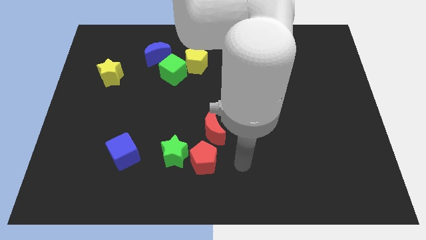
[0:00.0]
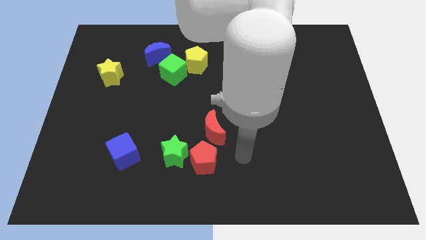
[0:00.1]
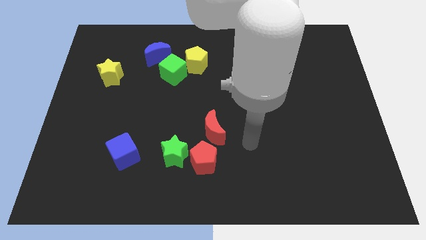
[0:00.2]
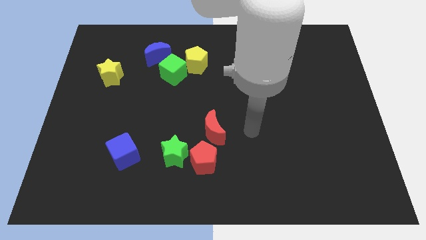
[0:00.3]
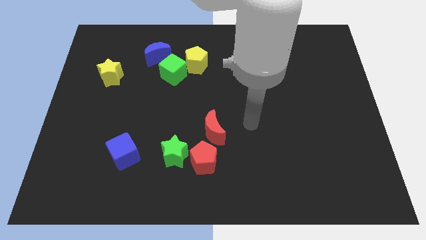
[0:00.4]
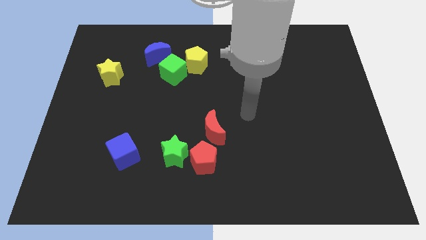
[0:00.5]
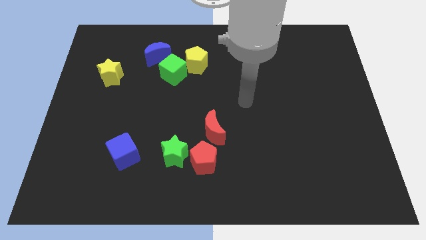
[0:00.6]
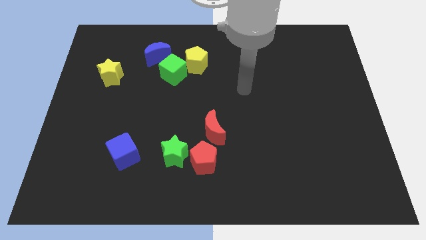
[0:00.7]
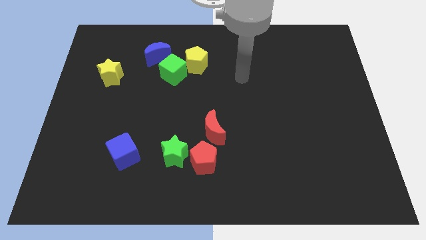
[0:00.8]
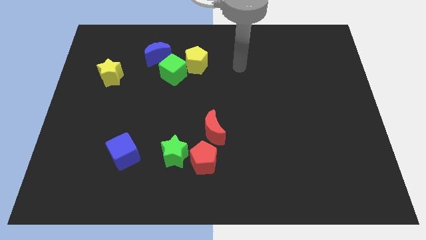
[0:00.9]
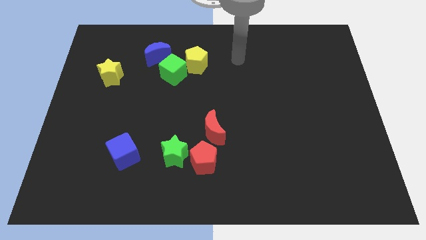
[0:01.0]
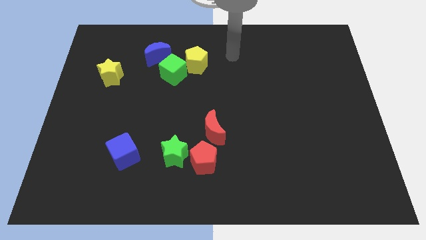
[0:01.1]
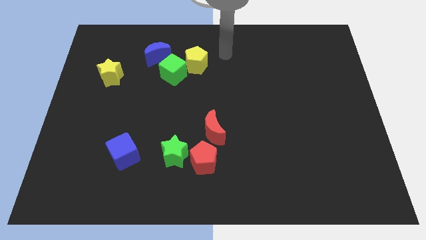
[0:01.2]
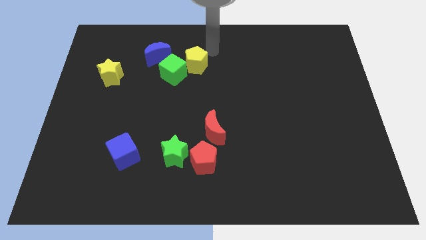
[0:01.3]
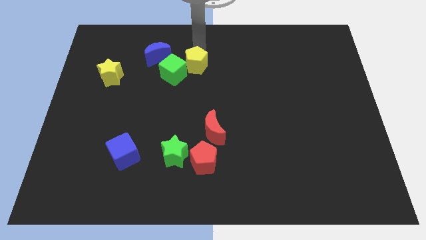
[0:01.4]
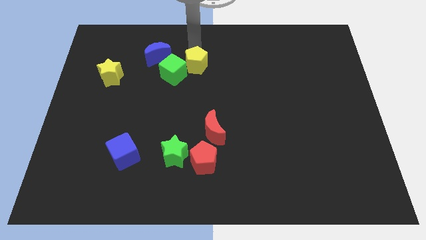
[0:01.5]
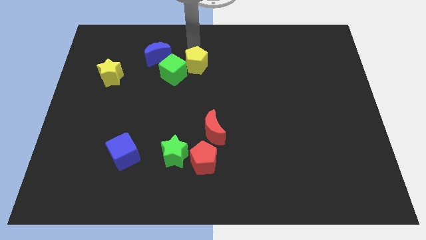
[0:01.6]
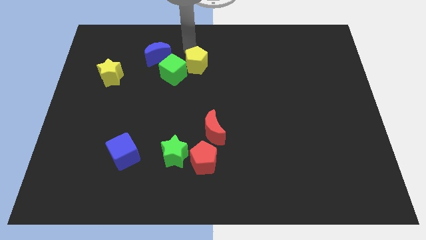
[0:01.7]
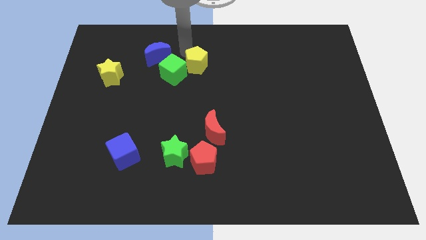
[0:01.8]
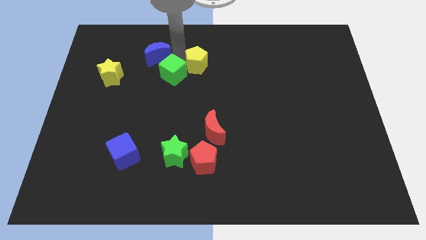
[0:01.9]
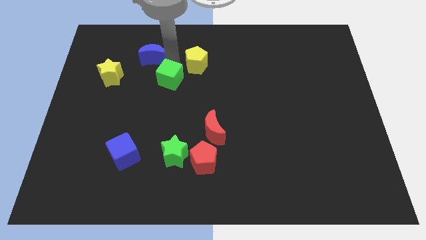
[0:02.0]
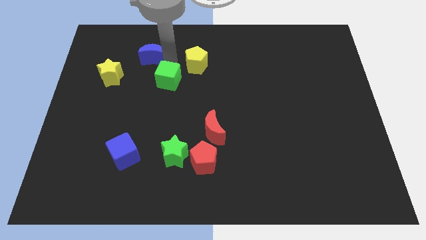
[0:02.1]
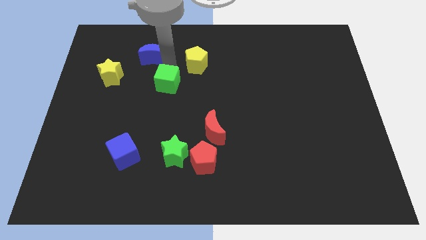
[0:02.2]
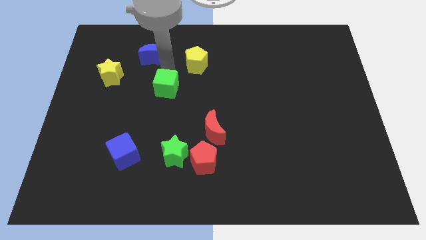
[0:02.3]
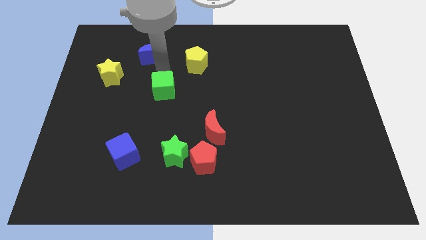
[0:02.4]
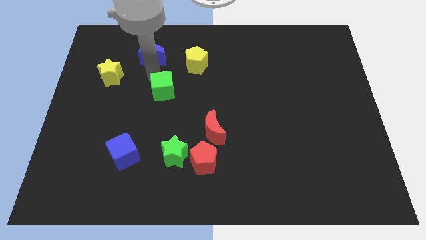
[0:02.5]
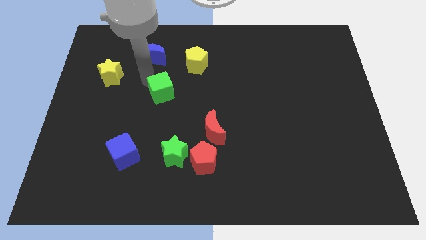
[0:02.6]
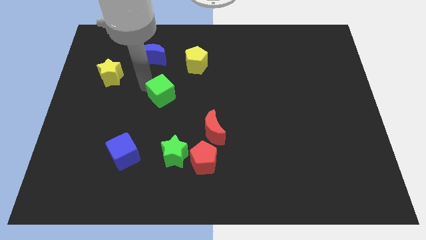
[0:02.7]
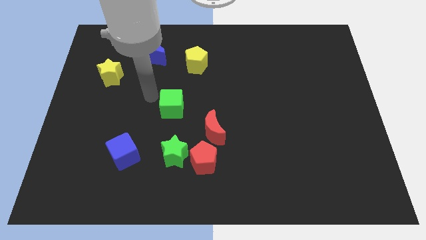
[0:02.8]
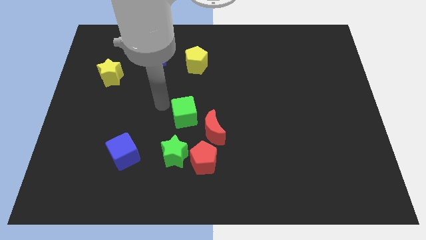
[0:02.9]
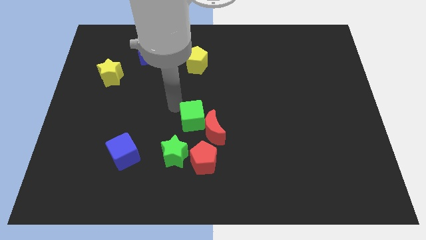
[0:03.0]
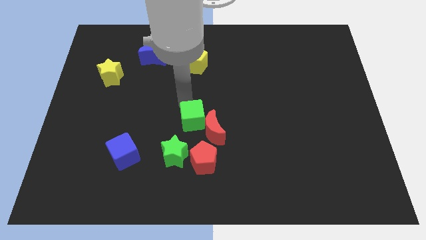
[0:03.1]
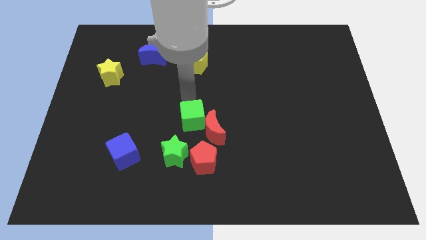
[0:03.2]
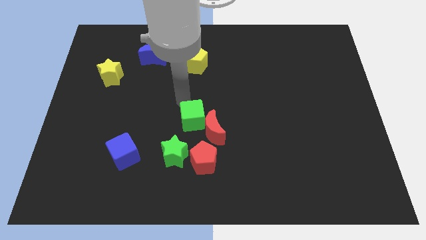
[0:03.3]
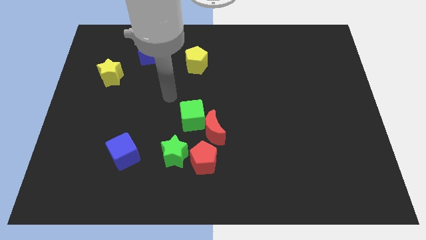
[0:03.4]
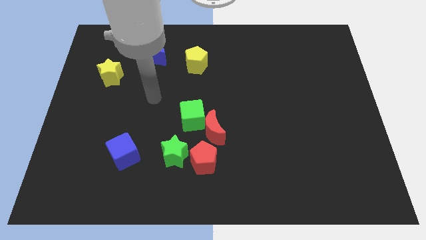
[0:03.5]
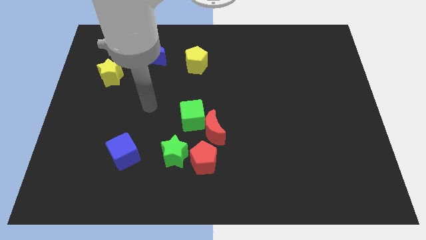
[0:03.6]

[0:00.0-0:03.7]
move the green cube to the left of red crescent

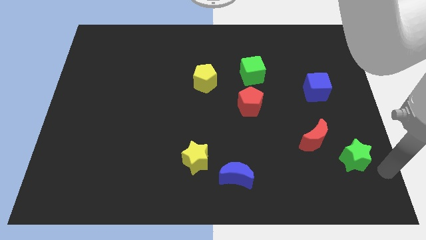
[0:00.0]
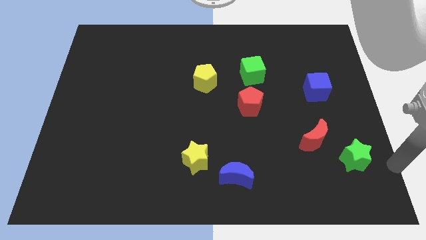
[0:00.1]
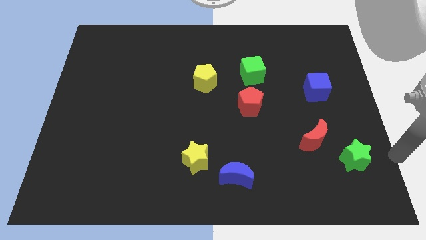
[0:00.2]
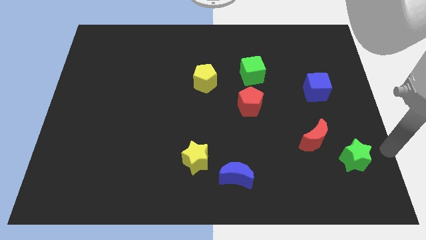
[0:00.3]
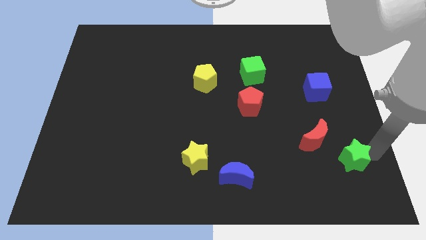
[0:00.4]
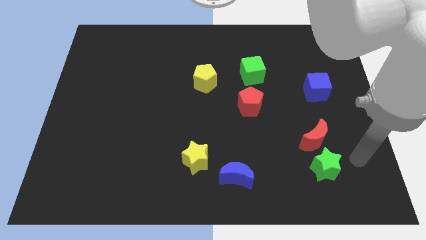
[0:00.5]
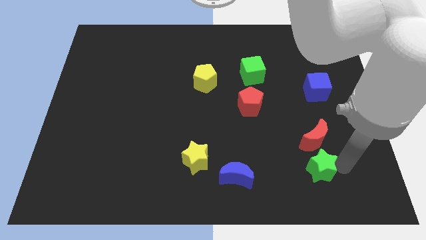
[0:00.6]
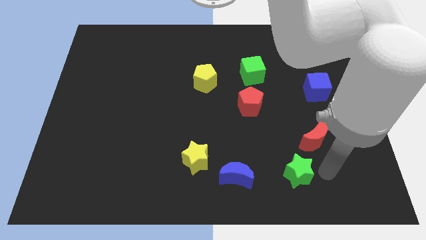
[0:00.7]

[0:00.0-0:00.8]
push the green star below the red crescent

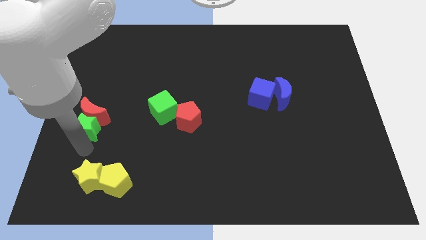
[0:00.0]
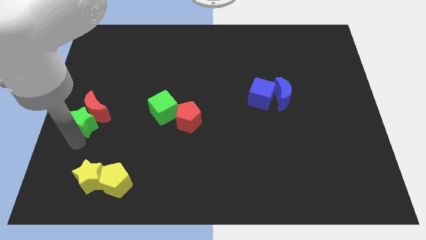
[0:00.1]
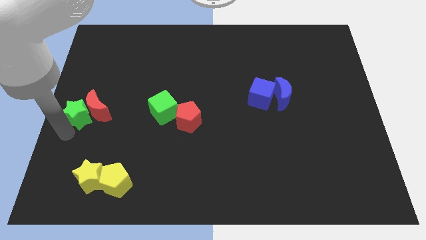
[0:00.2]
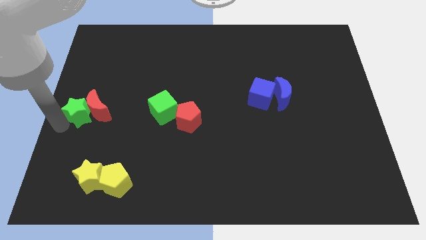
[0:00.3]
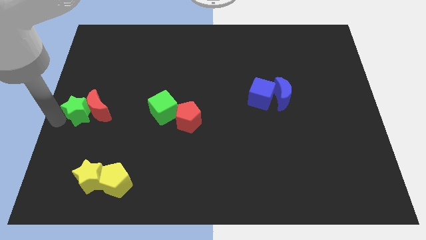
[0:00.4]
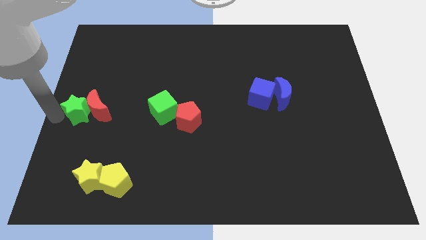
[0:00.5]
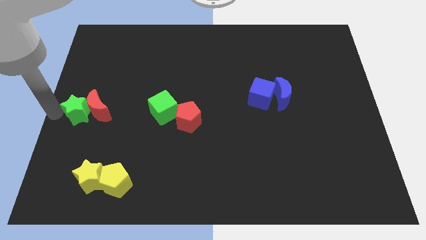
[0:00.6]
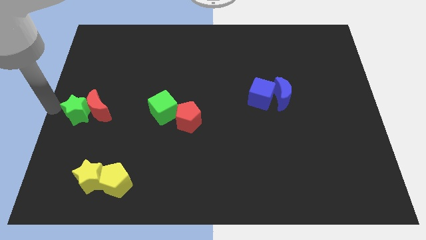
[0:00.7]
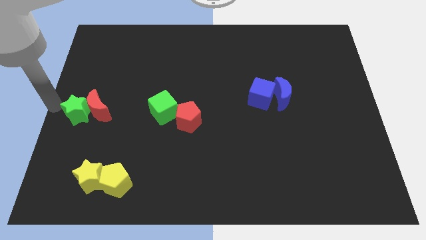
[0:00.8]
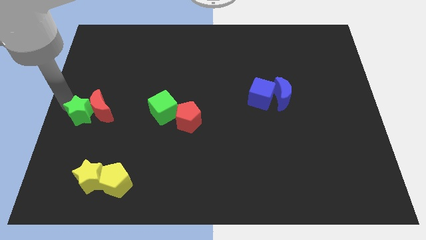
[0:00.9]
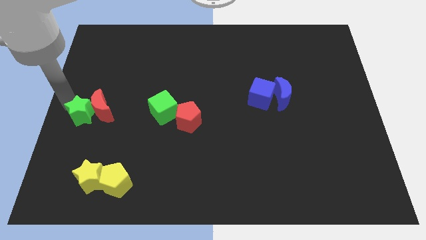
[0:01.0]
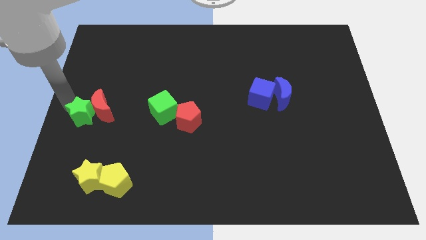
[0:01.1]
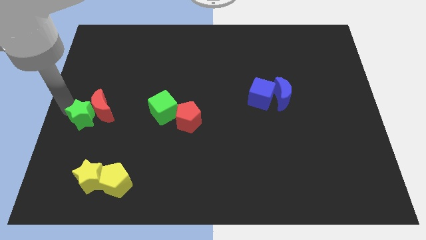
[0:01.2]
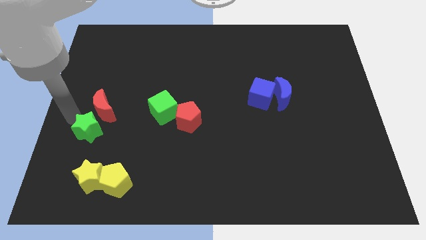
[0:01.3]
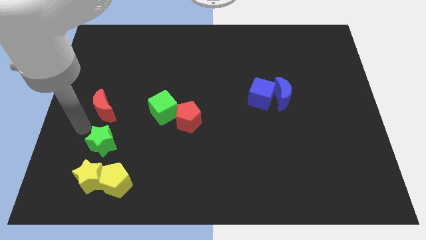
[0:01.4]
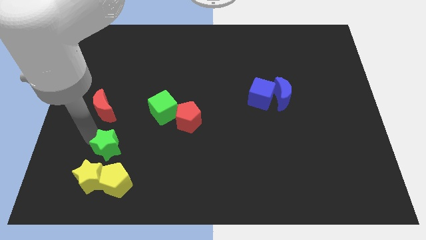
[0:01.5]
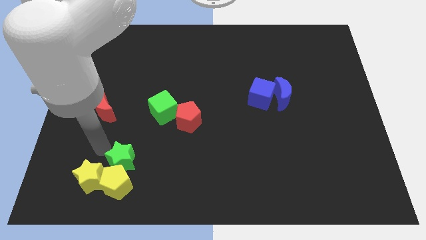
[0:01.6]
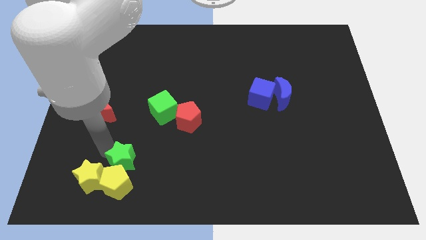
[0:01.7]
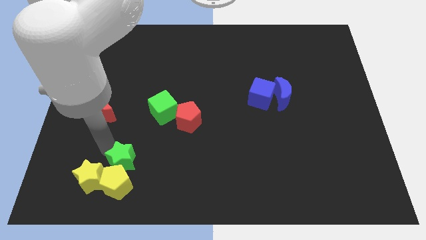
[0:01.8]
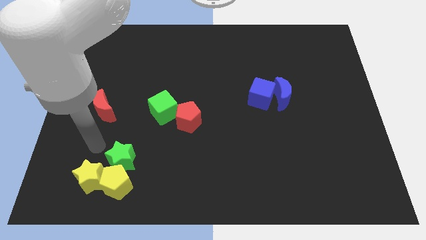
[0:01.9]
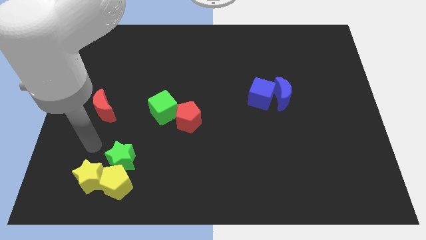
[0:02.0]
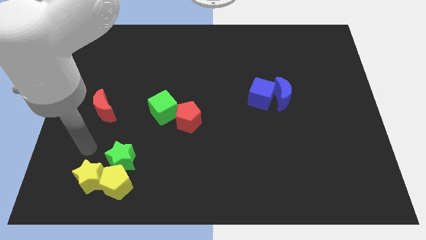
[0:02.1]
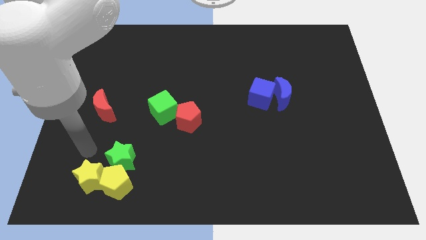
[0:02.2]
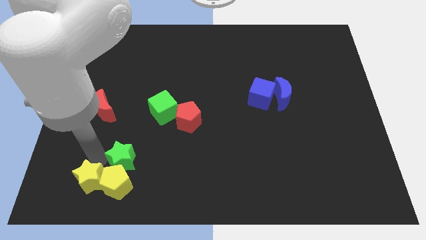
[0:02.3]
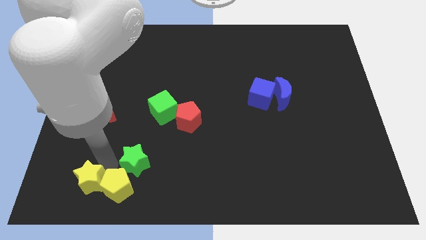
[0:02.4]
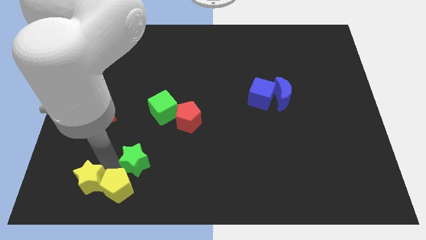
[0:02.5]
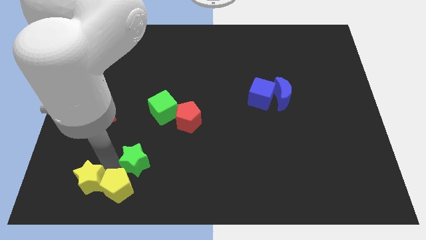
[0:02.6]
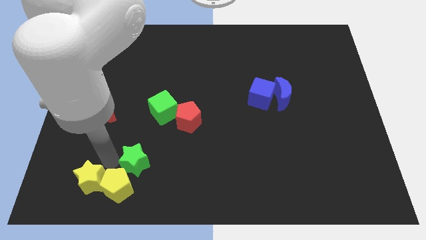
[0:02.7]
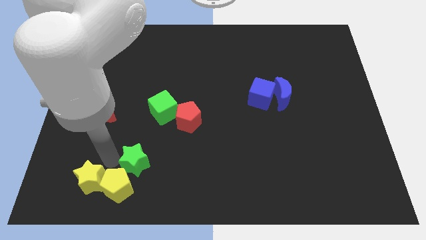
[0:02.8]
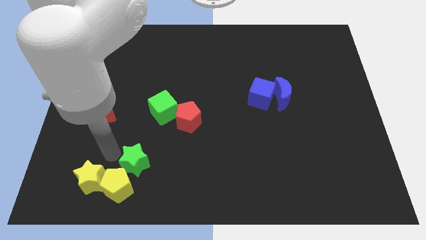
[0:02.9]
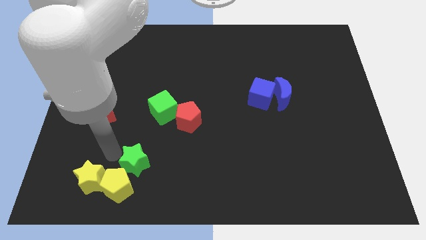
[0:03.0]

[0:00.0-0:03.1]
separate the green star from the red moon

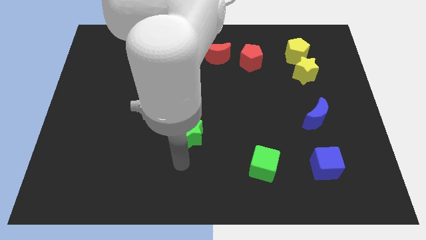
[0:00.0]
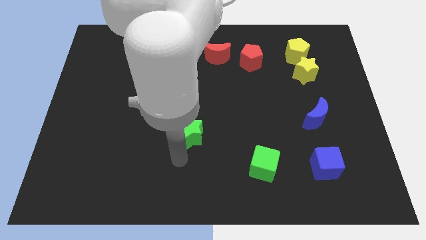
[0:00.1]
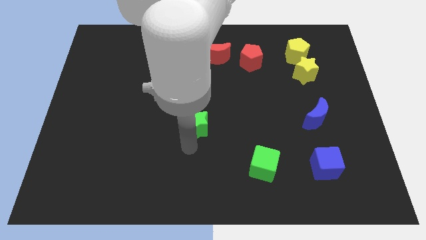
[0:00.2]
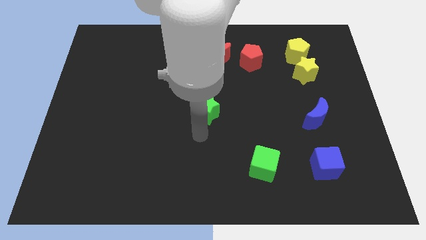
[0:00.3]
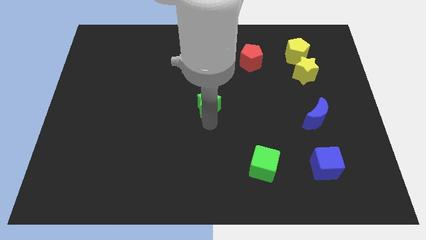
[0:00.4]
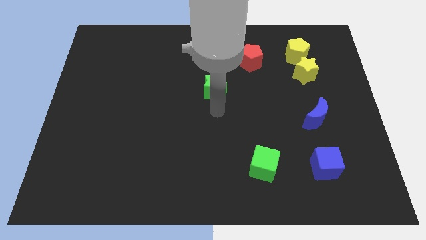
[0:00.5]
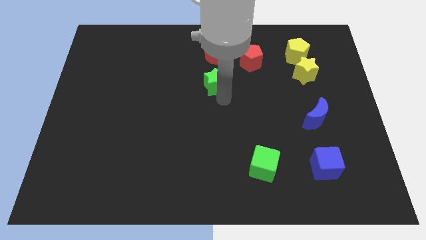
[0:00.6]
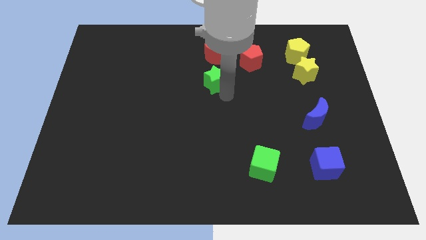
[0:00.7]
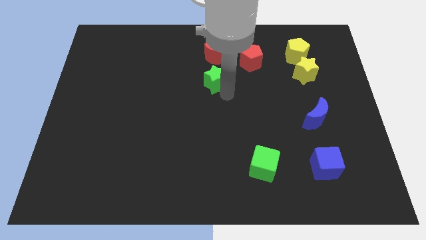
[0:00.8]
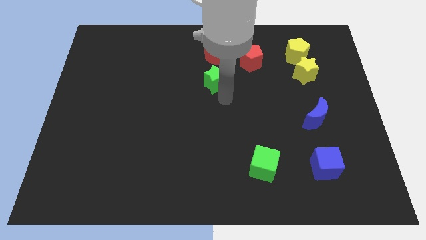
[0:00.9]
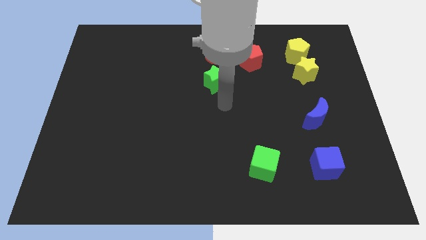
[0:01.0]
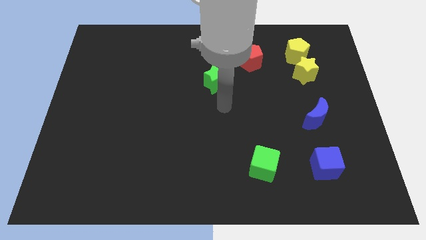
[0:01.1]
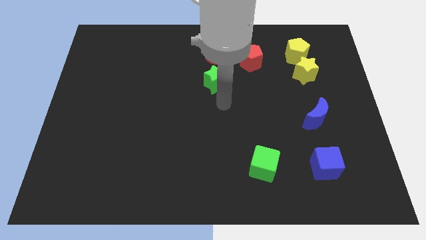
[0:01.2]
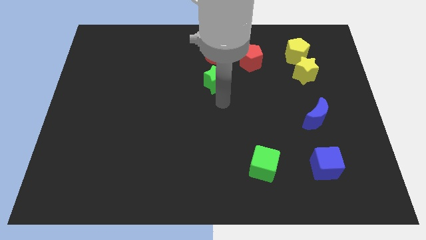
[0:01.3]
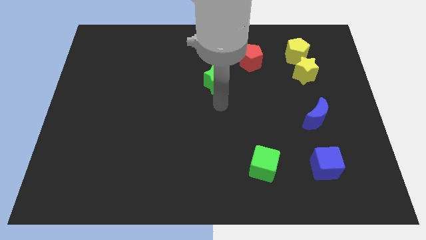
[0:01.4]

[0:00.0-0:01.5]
push the green star to the bottom of the red crescent
